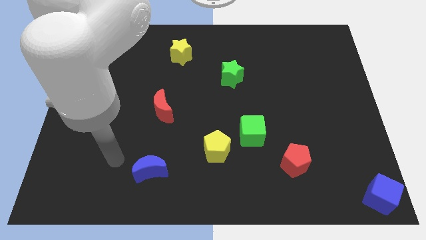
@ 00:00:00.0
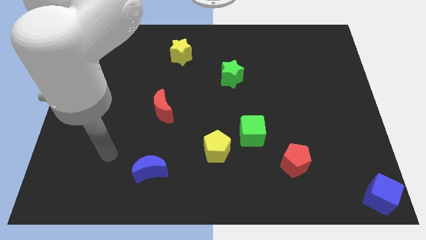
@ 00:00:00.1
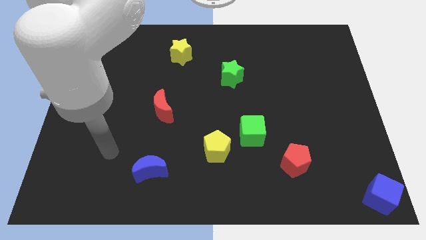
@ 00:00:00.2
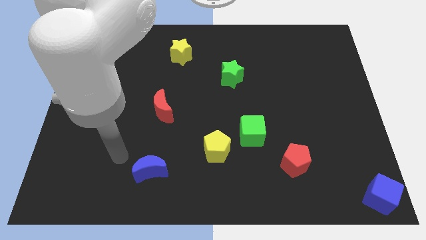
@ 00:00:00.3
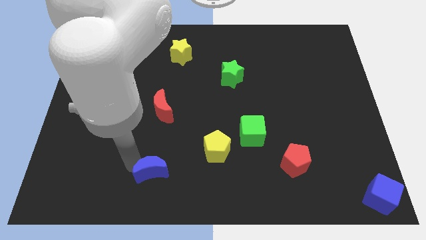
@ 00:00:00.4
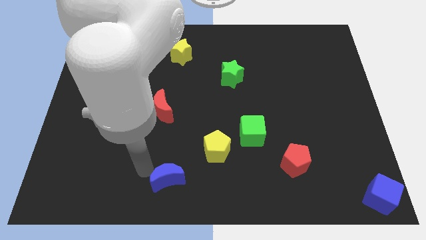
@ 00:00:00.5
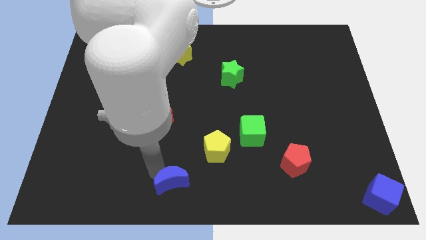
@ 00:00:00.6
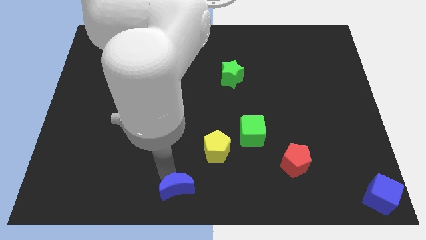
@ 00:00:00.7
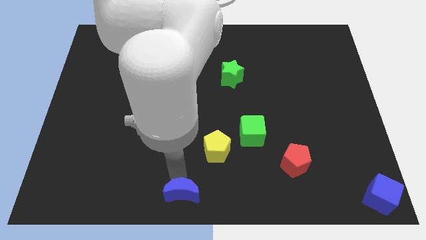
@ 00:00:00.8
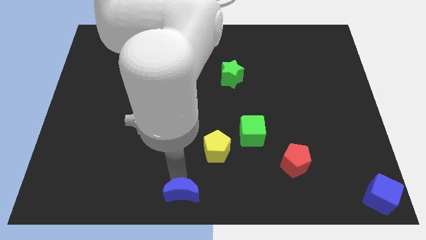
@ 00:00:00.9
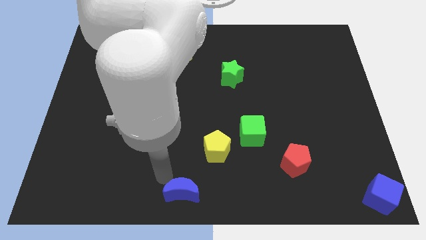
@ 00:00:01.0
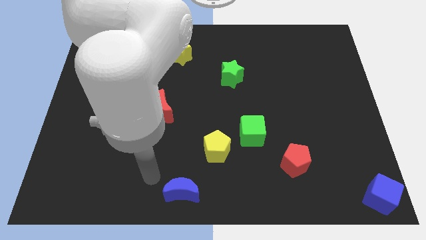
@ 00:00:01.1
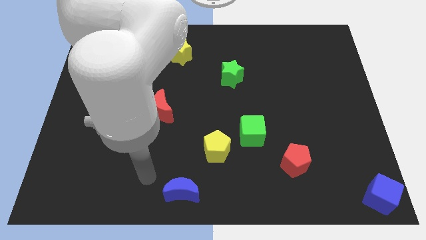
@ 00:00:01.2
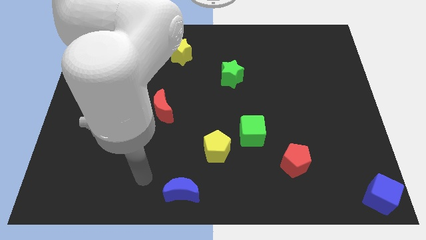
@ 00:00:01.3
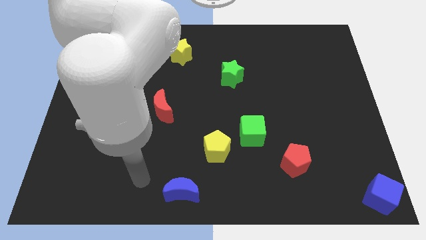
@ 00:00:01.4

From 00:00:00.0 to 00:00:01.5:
push the blue crescent to the bottom

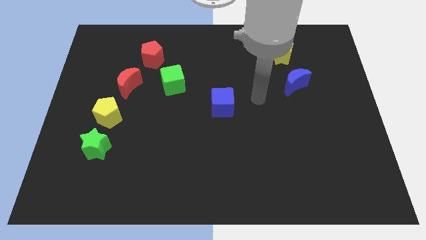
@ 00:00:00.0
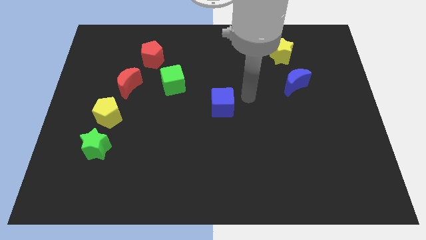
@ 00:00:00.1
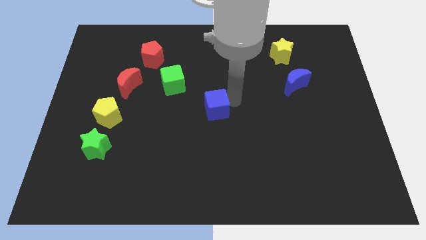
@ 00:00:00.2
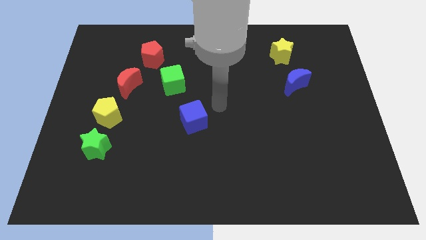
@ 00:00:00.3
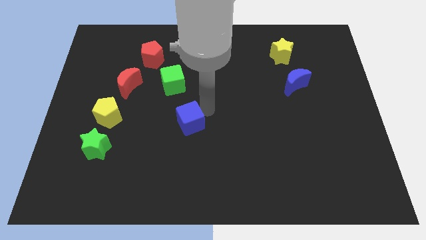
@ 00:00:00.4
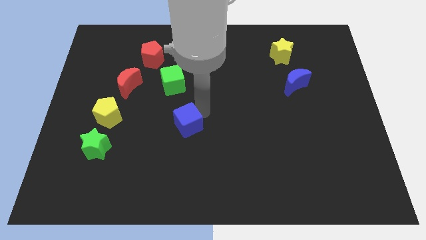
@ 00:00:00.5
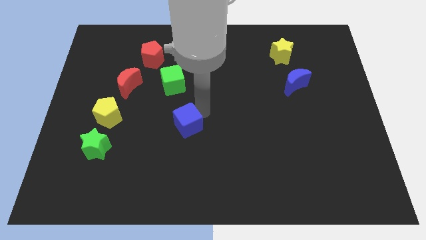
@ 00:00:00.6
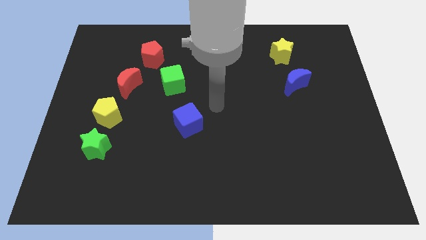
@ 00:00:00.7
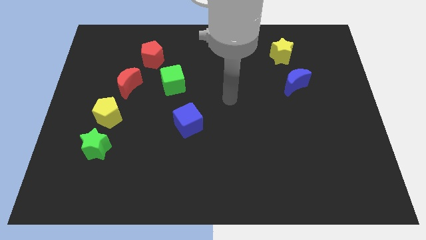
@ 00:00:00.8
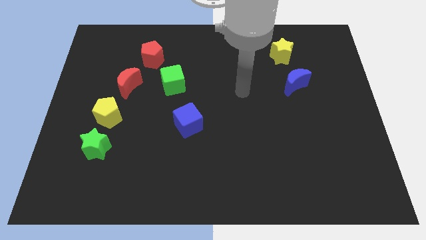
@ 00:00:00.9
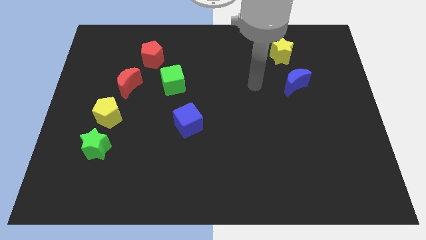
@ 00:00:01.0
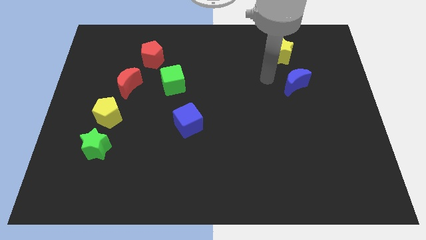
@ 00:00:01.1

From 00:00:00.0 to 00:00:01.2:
slide the blue cube diagonally to the top right of the green star

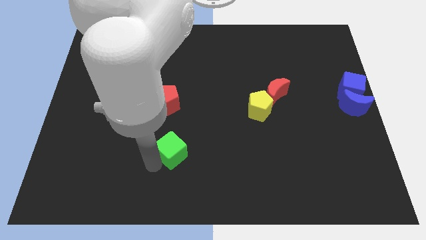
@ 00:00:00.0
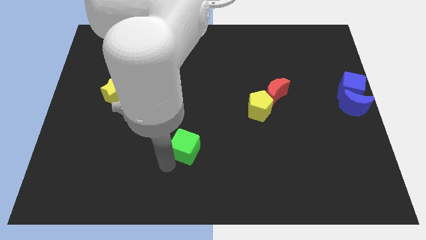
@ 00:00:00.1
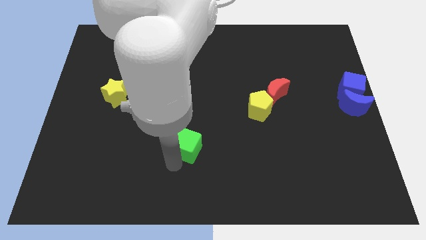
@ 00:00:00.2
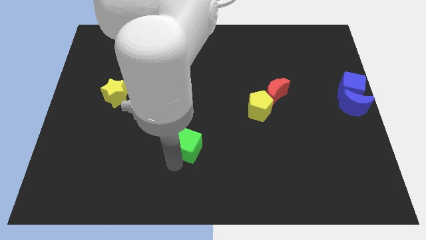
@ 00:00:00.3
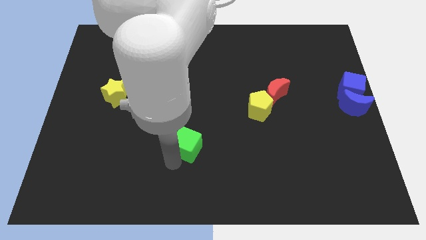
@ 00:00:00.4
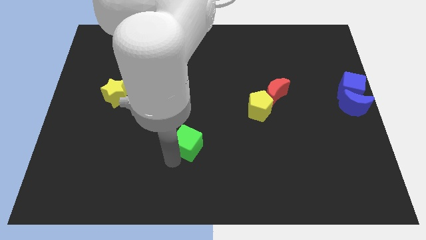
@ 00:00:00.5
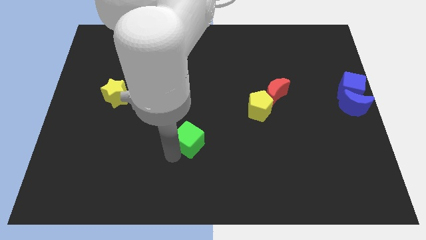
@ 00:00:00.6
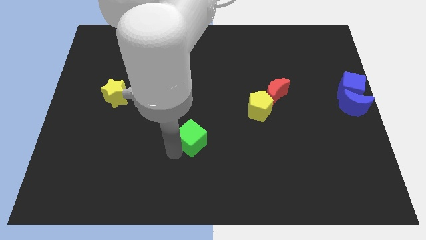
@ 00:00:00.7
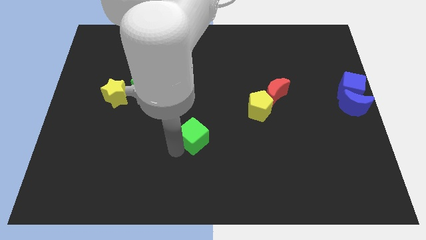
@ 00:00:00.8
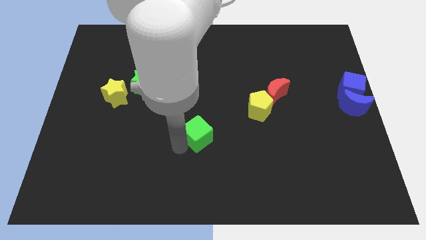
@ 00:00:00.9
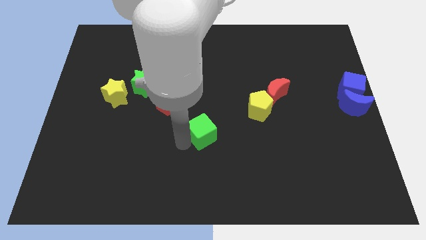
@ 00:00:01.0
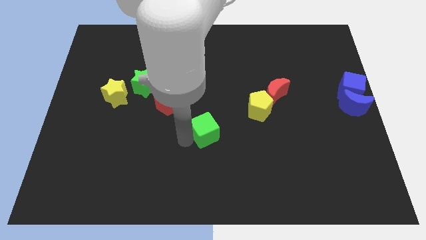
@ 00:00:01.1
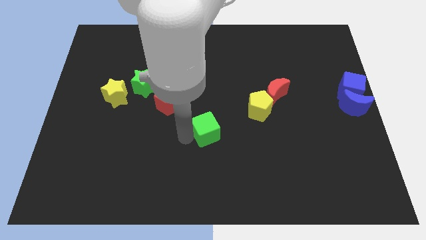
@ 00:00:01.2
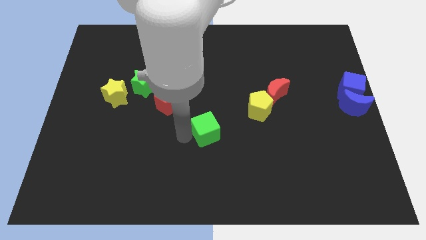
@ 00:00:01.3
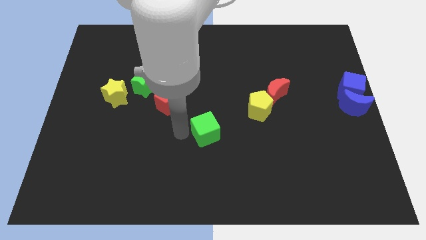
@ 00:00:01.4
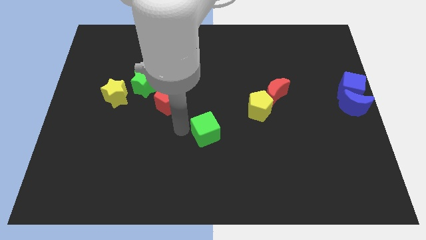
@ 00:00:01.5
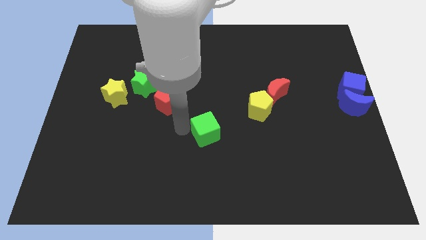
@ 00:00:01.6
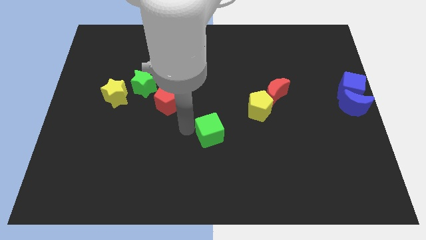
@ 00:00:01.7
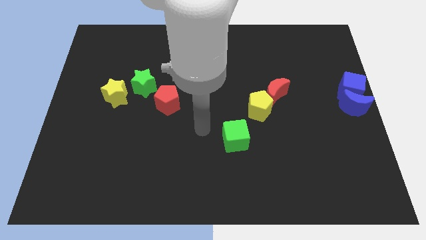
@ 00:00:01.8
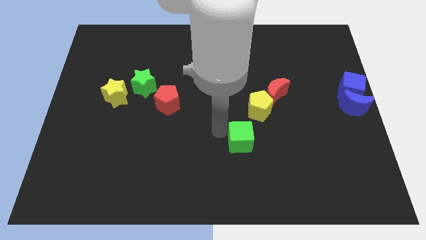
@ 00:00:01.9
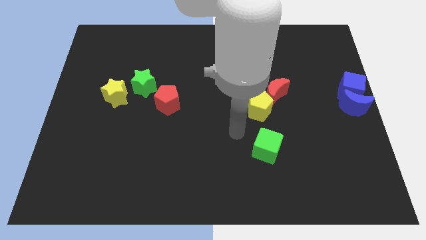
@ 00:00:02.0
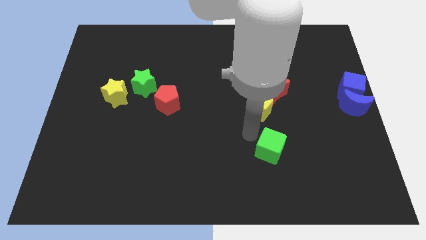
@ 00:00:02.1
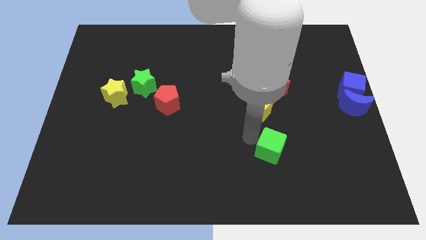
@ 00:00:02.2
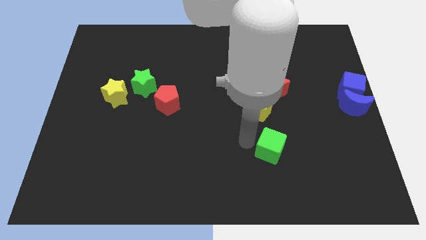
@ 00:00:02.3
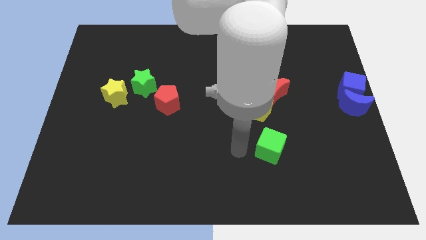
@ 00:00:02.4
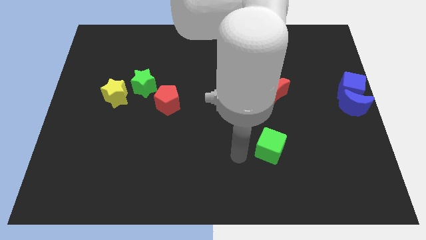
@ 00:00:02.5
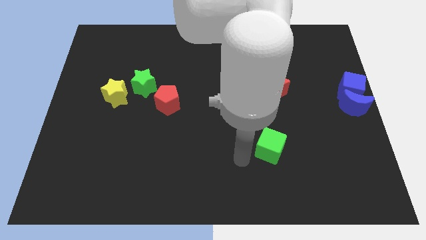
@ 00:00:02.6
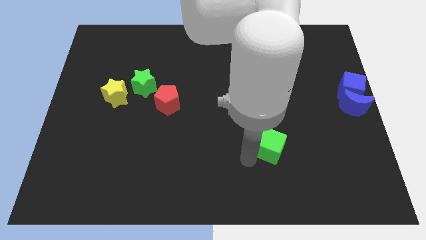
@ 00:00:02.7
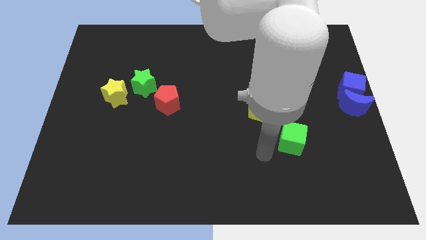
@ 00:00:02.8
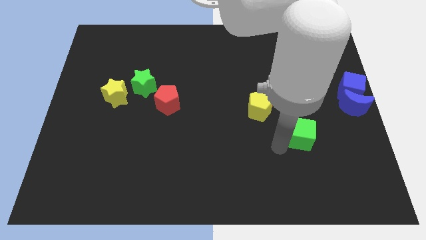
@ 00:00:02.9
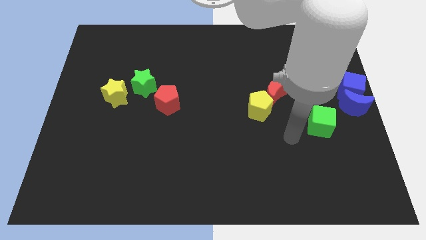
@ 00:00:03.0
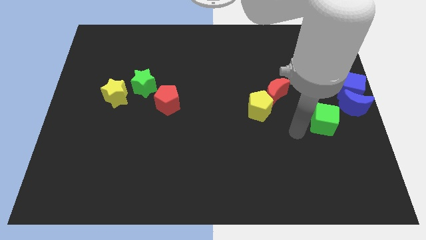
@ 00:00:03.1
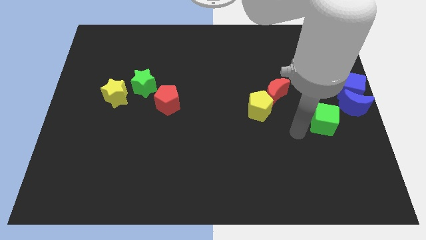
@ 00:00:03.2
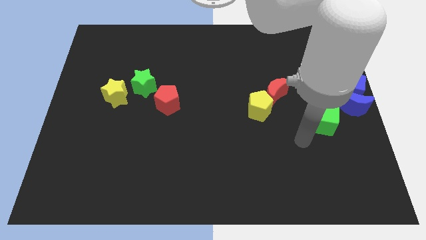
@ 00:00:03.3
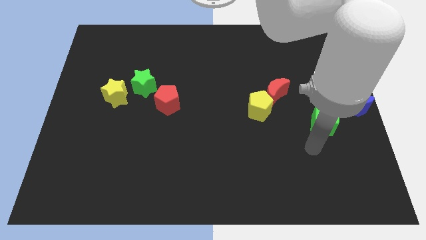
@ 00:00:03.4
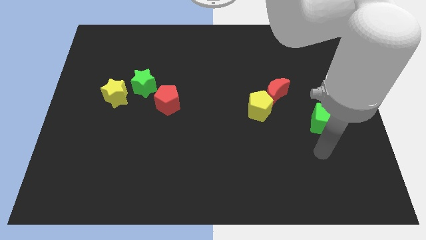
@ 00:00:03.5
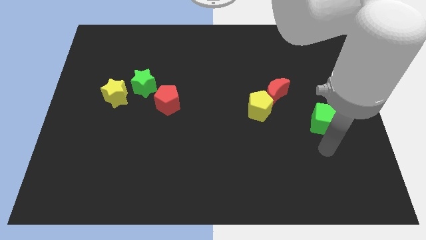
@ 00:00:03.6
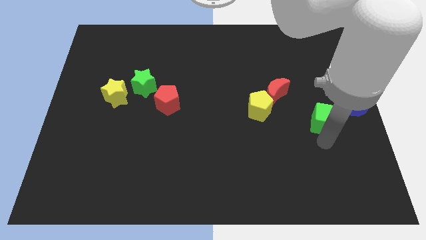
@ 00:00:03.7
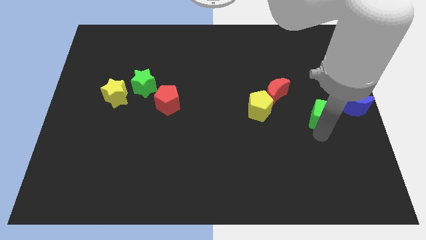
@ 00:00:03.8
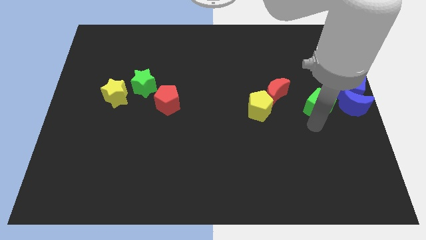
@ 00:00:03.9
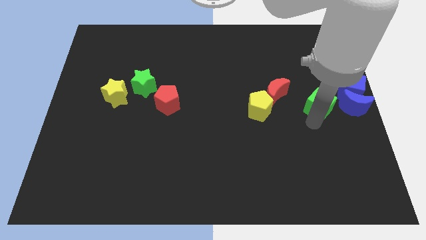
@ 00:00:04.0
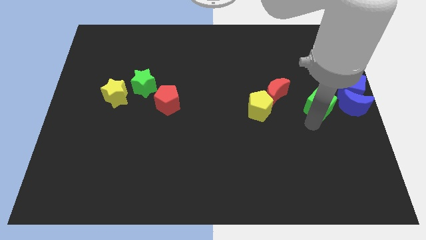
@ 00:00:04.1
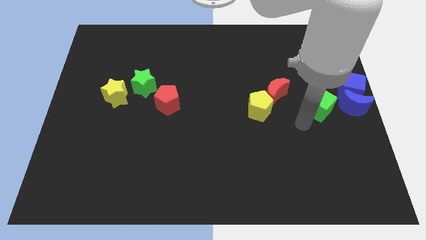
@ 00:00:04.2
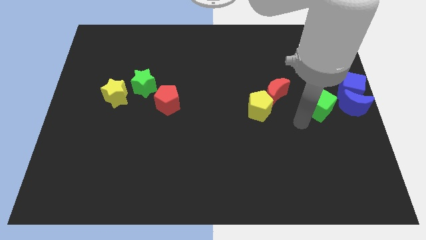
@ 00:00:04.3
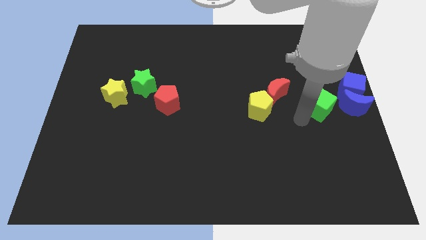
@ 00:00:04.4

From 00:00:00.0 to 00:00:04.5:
move the green cube beside the left side of the blue moon

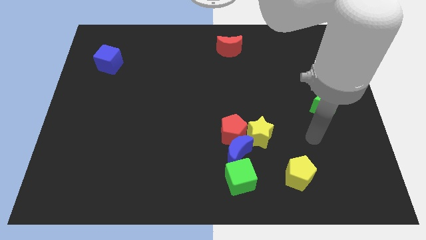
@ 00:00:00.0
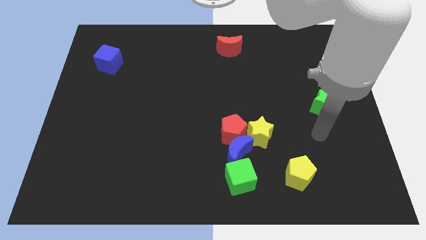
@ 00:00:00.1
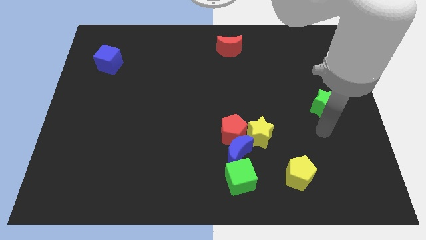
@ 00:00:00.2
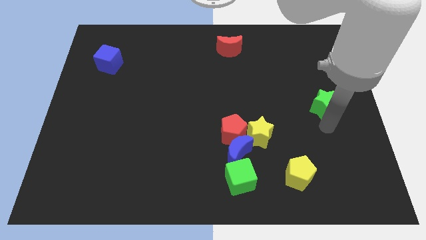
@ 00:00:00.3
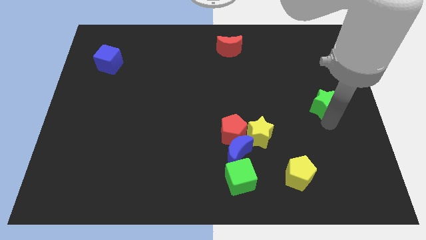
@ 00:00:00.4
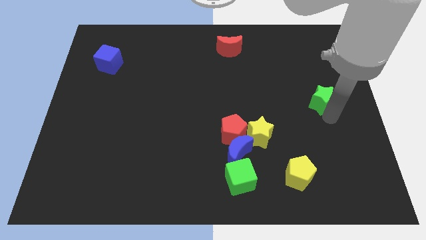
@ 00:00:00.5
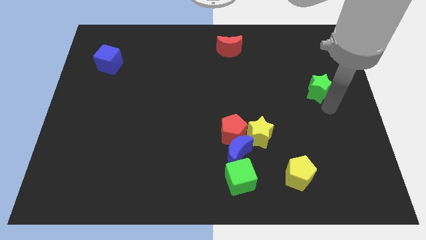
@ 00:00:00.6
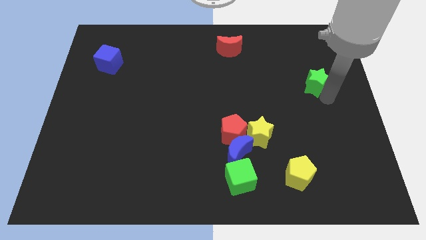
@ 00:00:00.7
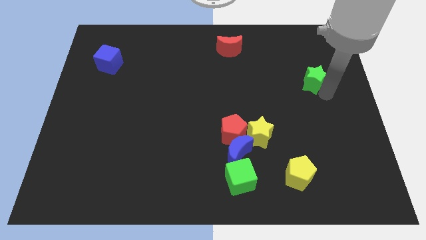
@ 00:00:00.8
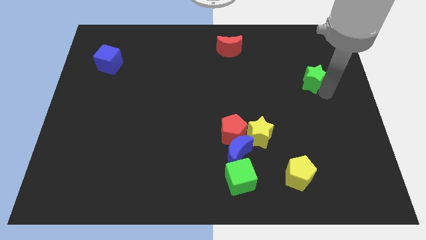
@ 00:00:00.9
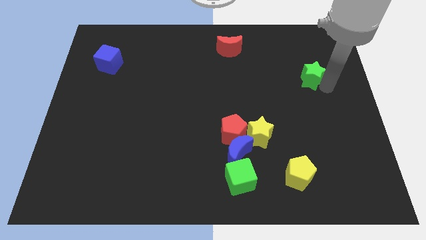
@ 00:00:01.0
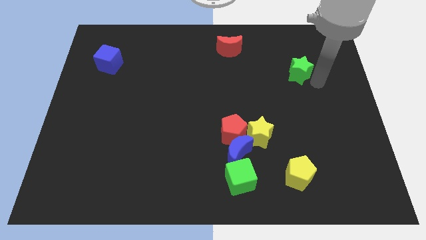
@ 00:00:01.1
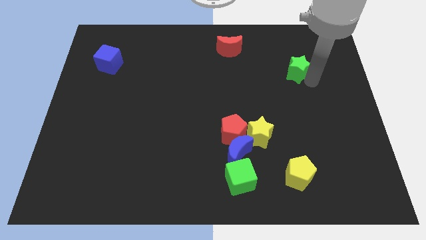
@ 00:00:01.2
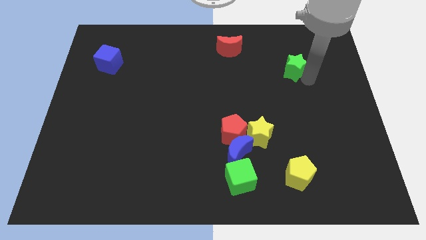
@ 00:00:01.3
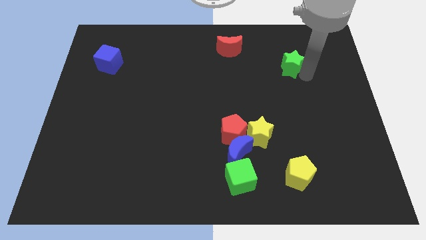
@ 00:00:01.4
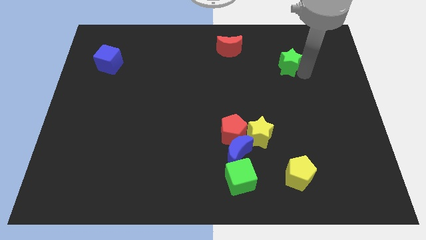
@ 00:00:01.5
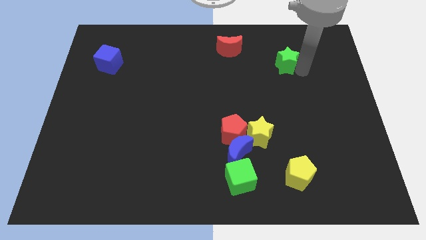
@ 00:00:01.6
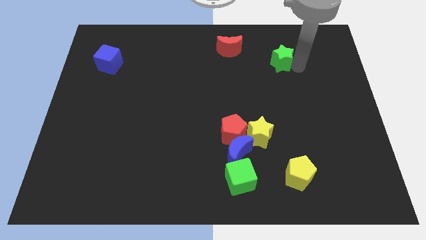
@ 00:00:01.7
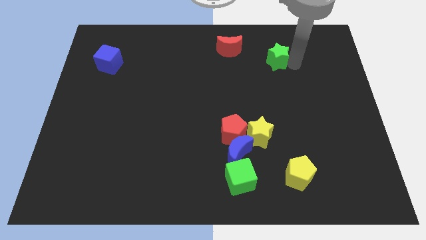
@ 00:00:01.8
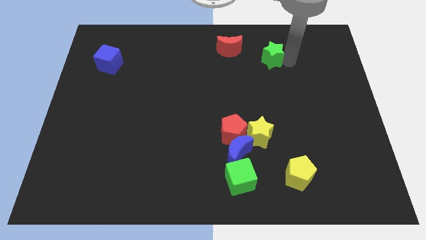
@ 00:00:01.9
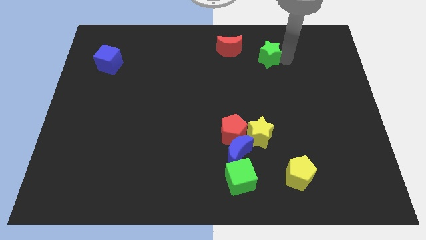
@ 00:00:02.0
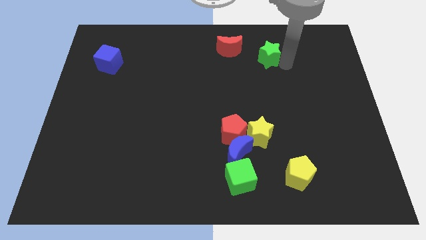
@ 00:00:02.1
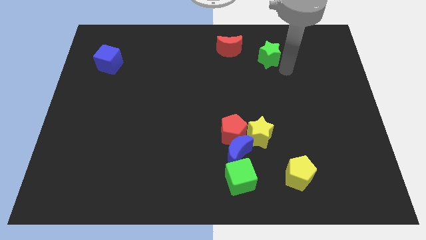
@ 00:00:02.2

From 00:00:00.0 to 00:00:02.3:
push the green star upwards
